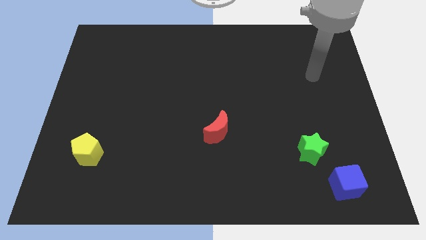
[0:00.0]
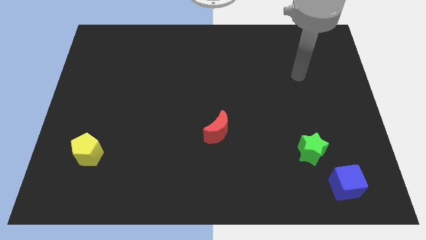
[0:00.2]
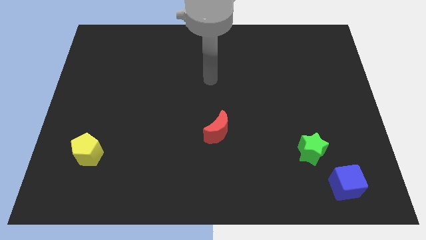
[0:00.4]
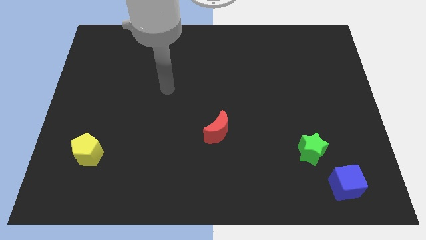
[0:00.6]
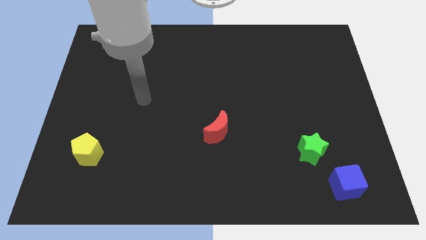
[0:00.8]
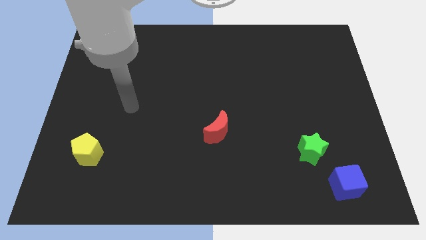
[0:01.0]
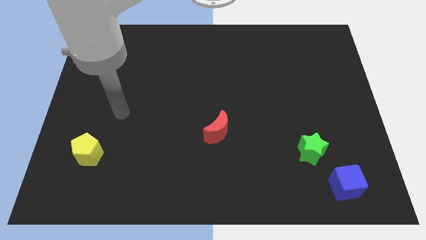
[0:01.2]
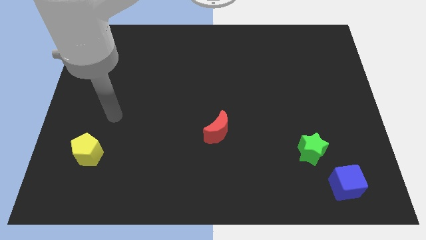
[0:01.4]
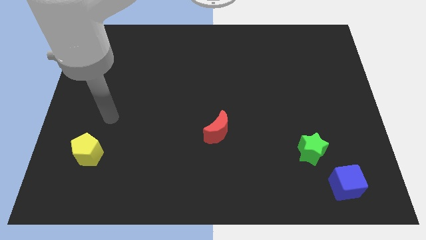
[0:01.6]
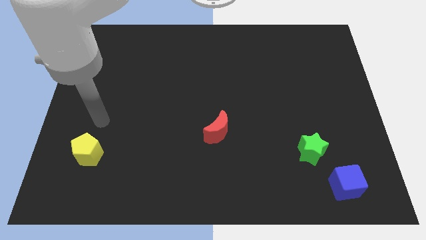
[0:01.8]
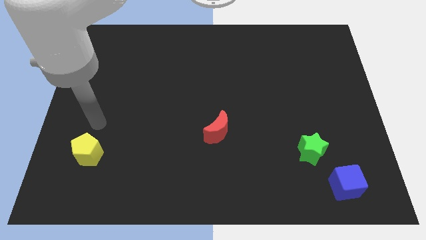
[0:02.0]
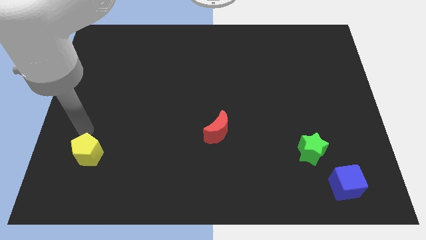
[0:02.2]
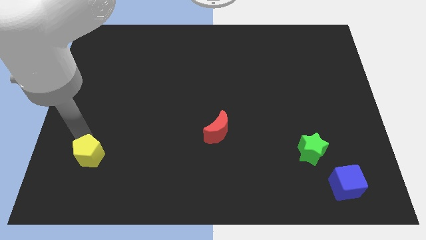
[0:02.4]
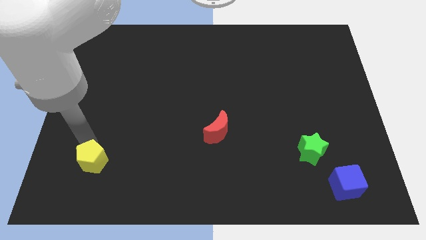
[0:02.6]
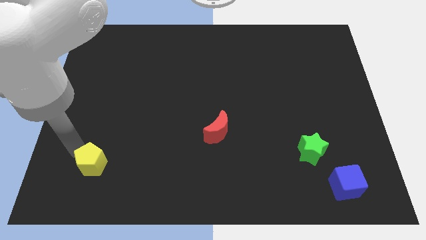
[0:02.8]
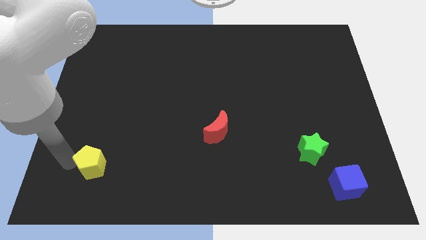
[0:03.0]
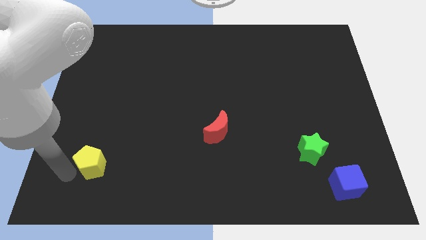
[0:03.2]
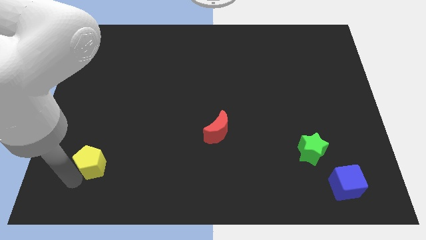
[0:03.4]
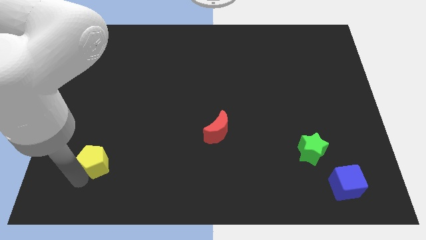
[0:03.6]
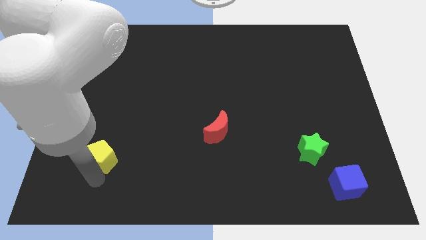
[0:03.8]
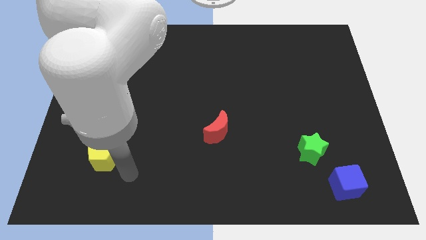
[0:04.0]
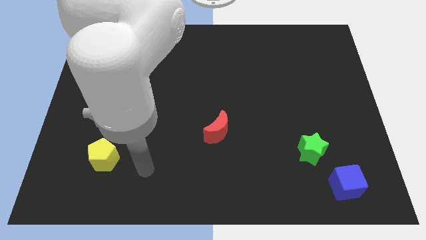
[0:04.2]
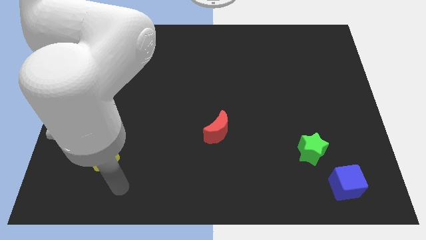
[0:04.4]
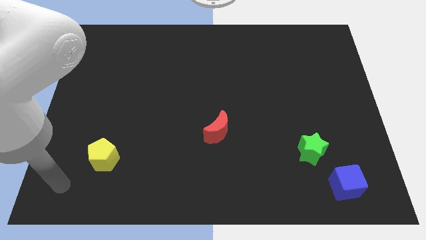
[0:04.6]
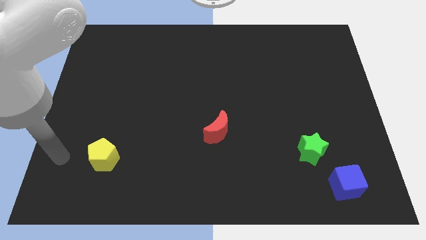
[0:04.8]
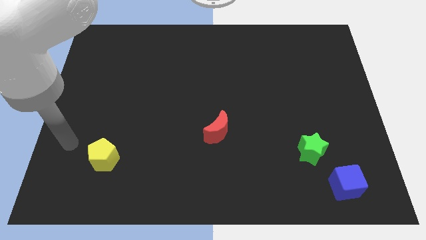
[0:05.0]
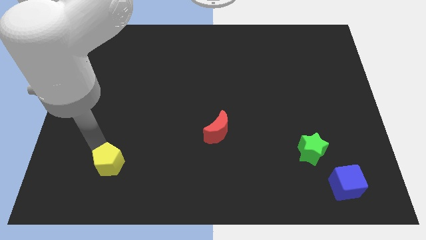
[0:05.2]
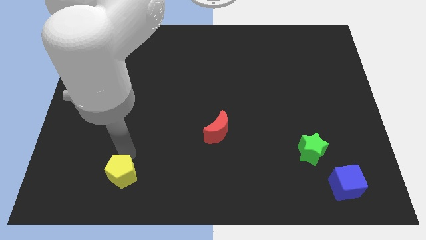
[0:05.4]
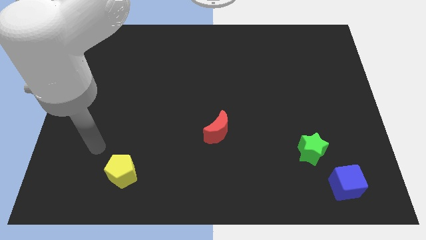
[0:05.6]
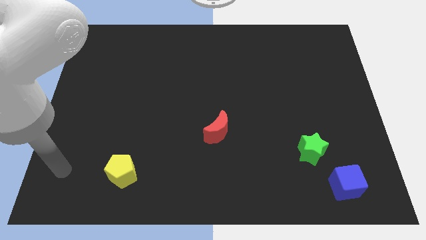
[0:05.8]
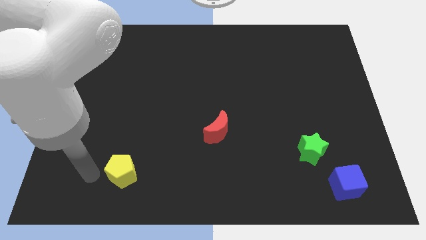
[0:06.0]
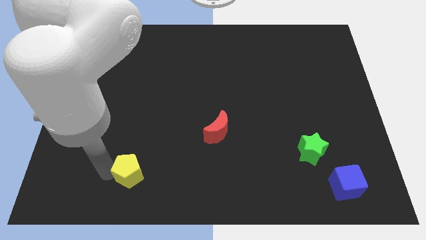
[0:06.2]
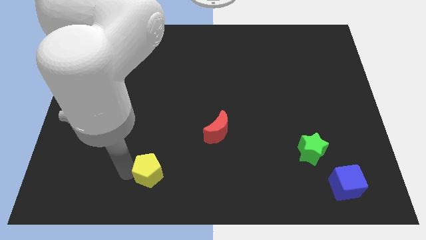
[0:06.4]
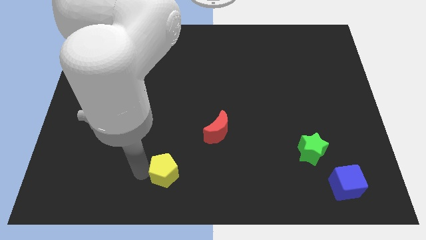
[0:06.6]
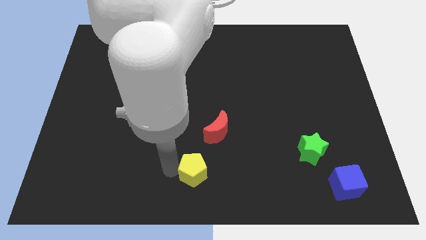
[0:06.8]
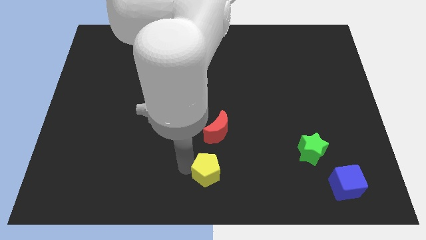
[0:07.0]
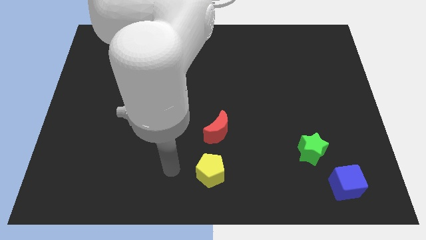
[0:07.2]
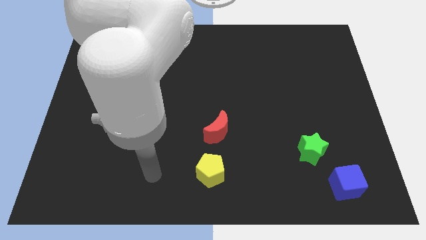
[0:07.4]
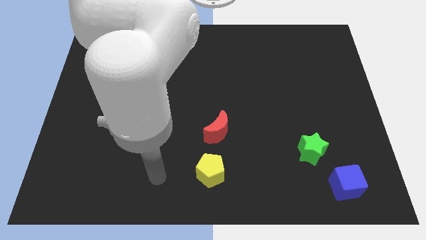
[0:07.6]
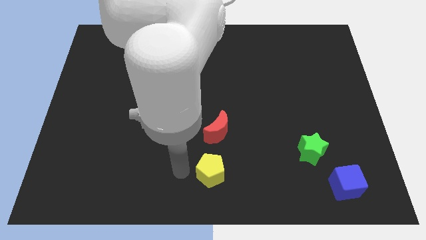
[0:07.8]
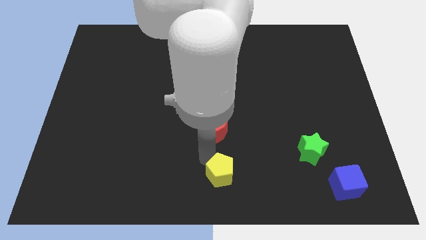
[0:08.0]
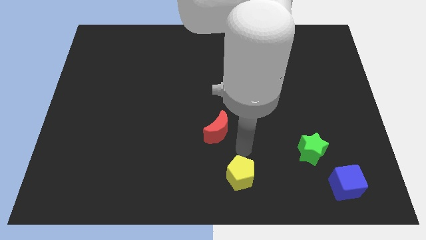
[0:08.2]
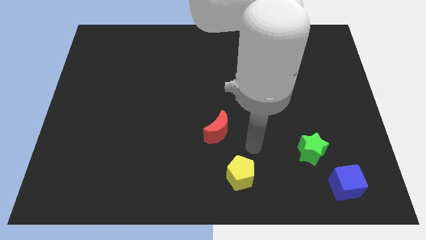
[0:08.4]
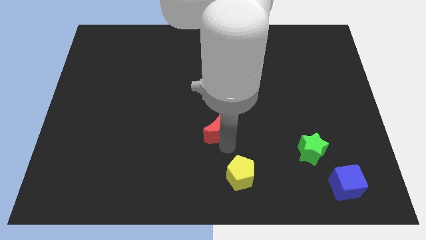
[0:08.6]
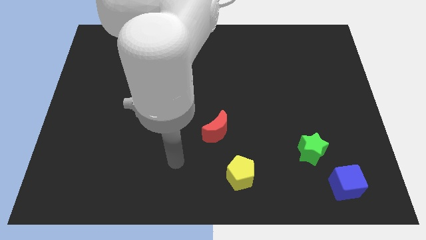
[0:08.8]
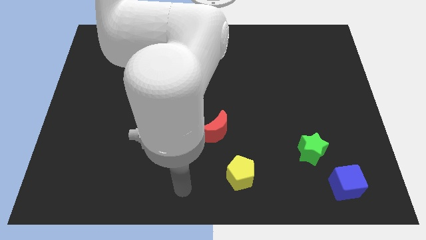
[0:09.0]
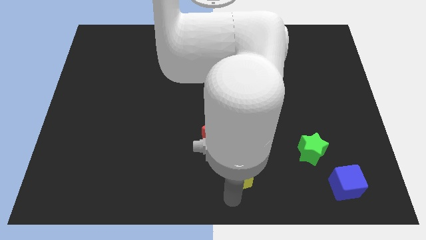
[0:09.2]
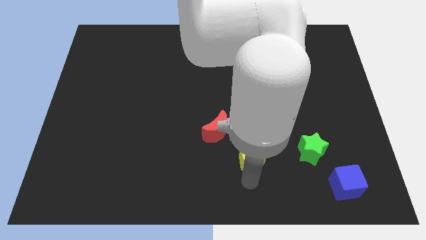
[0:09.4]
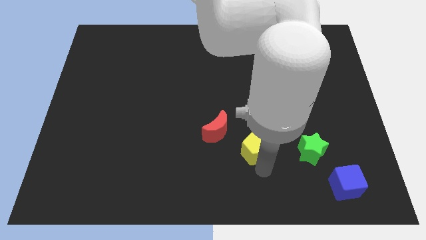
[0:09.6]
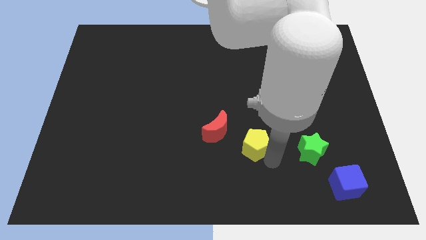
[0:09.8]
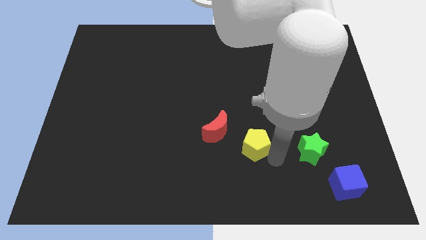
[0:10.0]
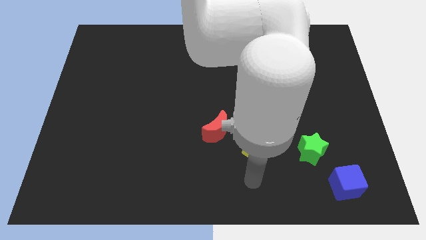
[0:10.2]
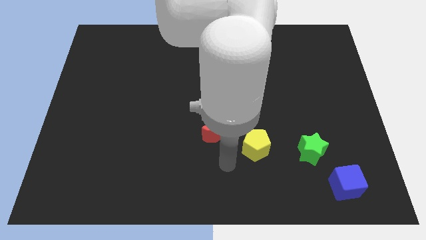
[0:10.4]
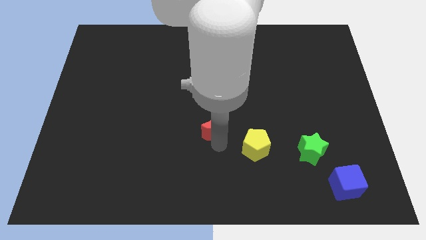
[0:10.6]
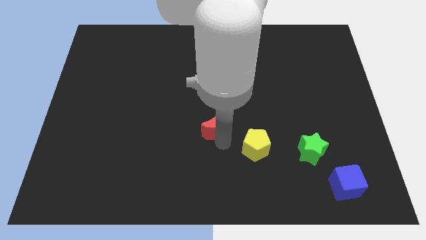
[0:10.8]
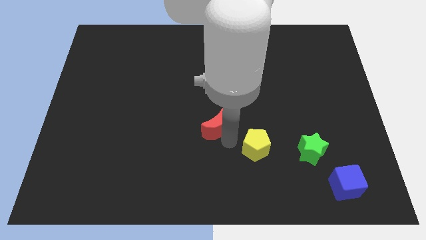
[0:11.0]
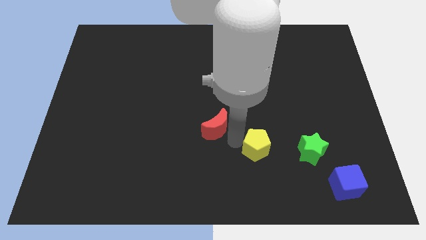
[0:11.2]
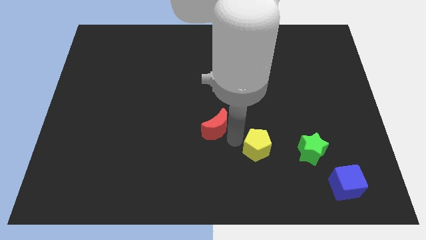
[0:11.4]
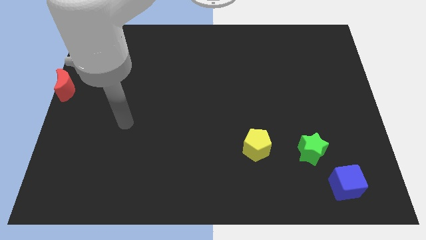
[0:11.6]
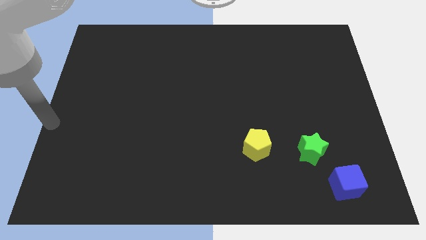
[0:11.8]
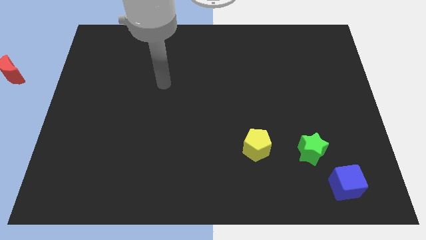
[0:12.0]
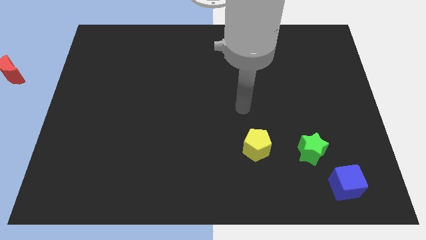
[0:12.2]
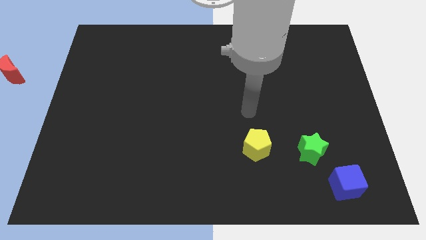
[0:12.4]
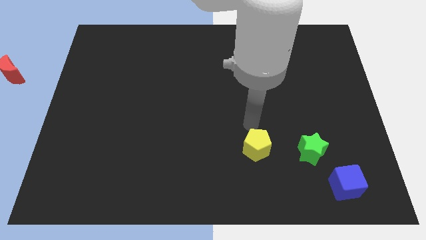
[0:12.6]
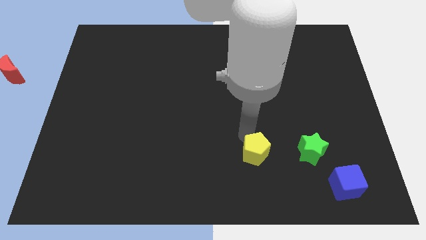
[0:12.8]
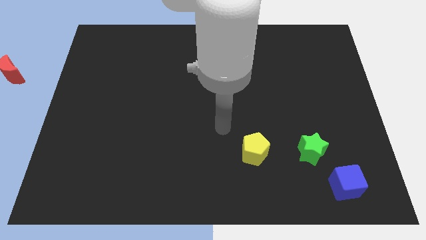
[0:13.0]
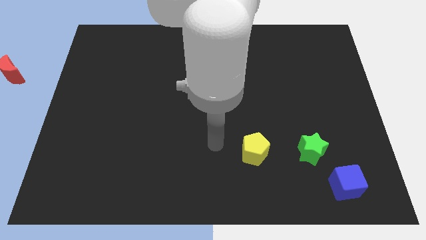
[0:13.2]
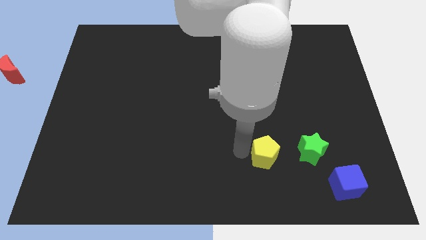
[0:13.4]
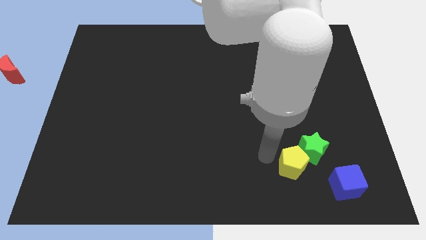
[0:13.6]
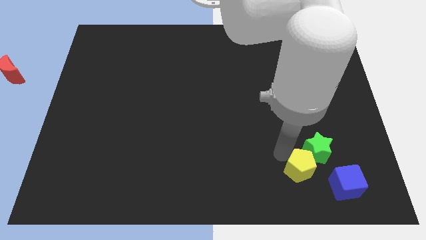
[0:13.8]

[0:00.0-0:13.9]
push the yellow pentagon towards the green block

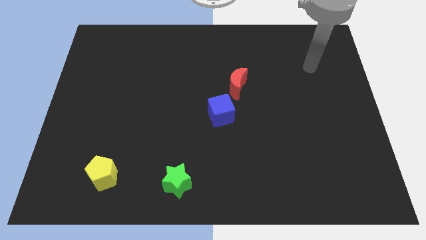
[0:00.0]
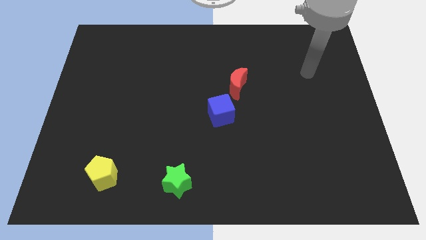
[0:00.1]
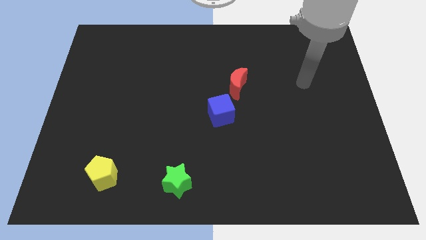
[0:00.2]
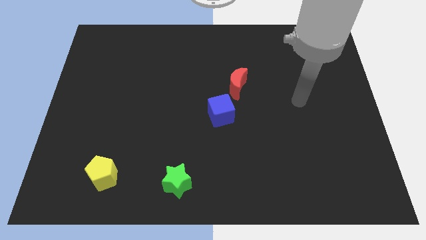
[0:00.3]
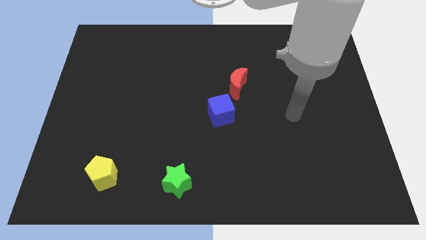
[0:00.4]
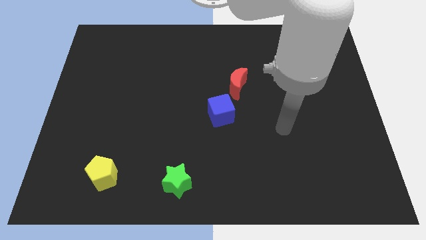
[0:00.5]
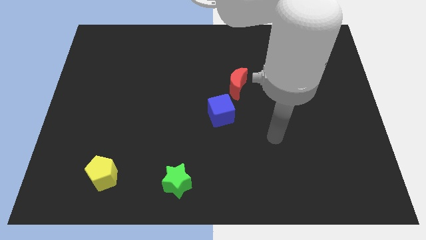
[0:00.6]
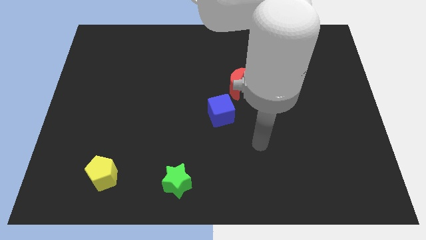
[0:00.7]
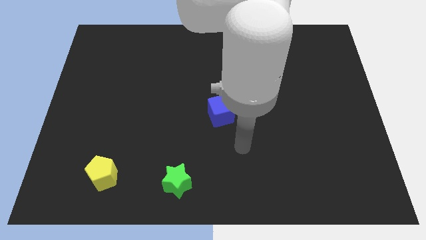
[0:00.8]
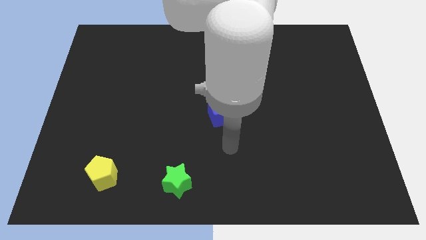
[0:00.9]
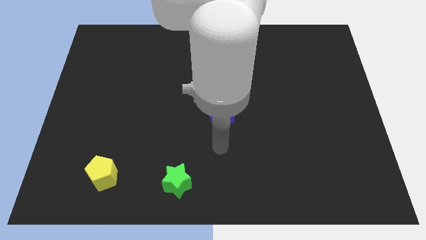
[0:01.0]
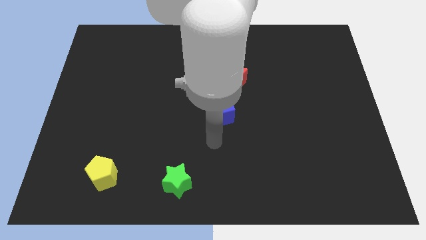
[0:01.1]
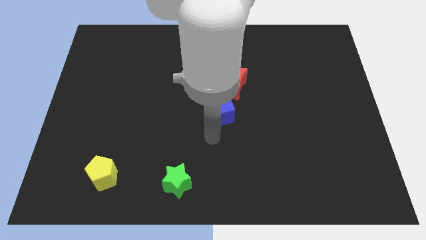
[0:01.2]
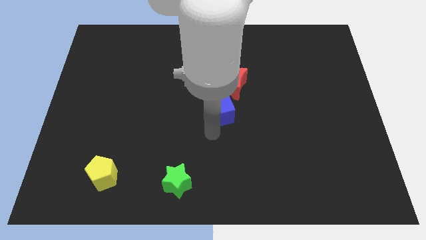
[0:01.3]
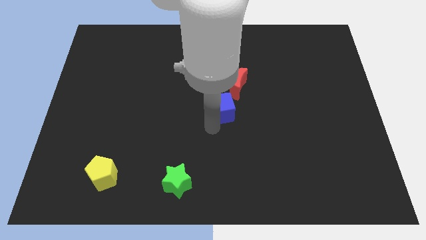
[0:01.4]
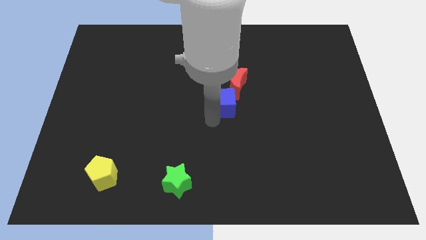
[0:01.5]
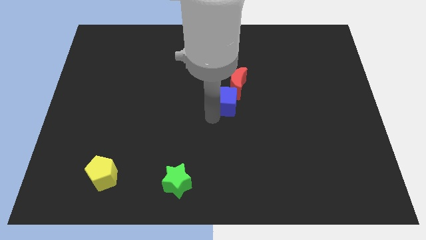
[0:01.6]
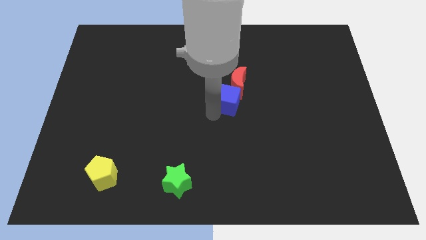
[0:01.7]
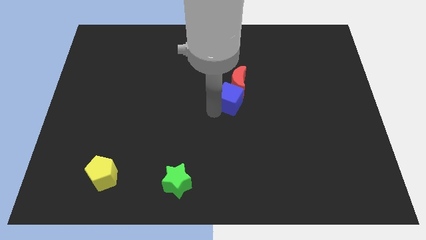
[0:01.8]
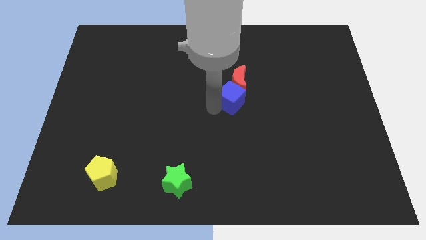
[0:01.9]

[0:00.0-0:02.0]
put the cube towards the red moon
